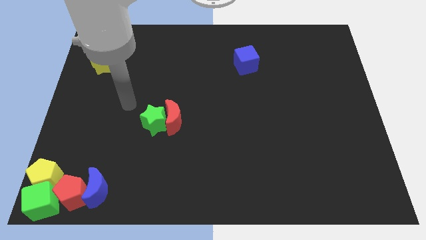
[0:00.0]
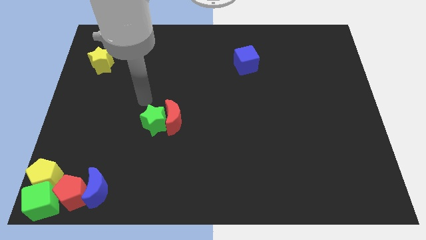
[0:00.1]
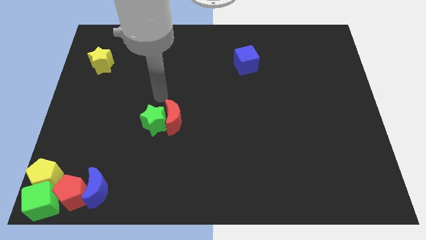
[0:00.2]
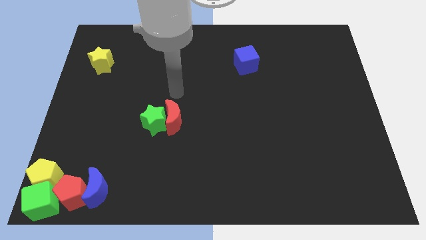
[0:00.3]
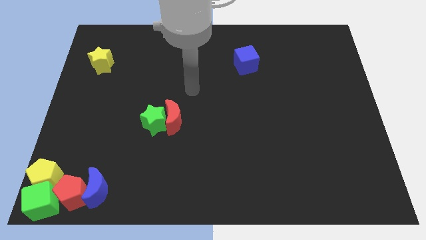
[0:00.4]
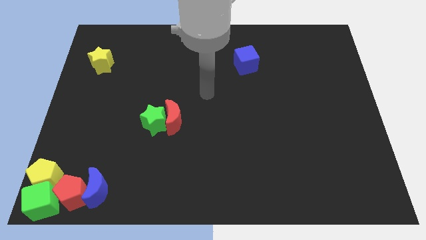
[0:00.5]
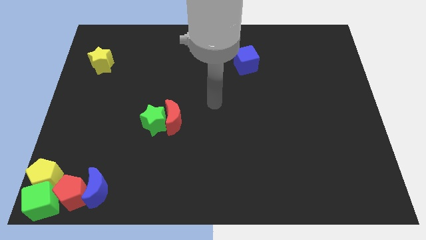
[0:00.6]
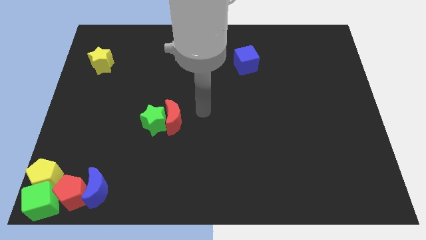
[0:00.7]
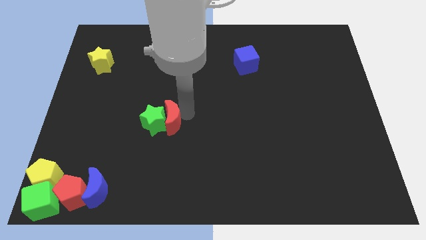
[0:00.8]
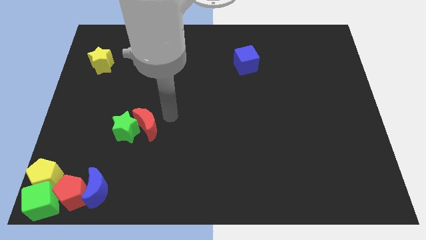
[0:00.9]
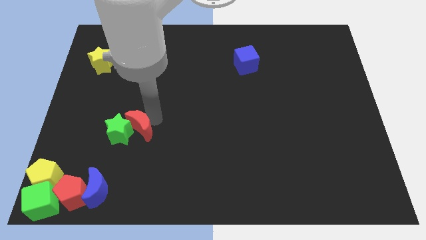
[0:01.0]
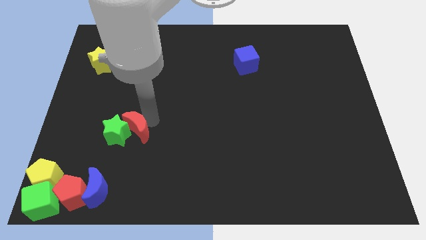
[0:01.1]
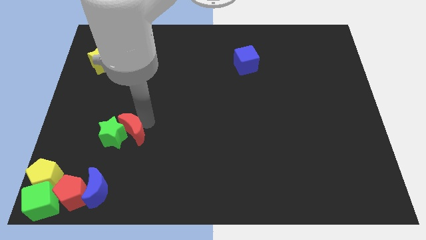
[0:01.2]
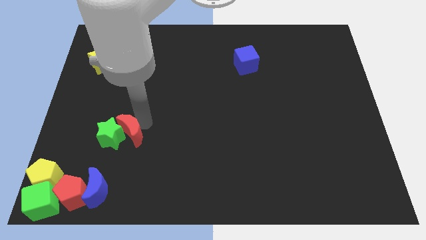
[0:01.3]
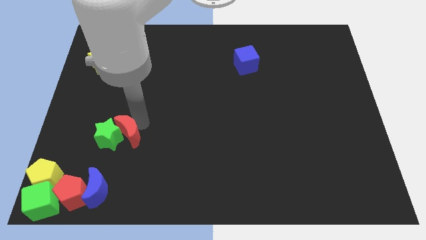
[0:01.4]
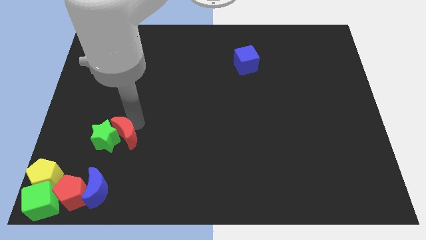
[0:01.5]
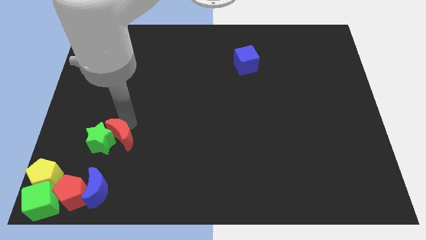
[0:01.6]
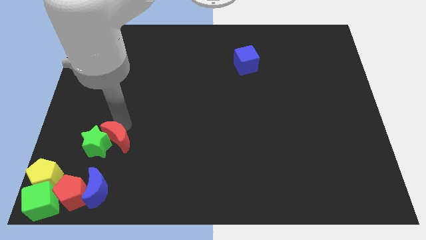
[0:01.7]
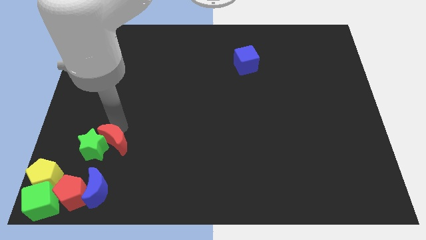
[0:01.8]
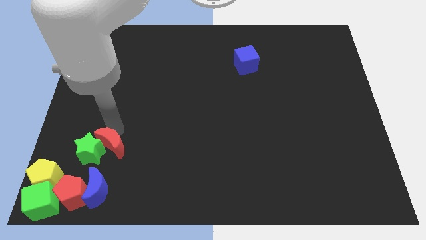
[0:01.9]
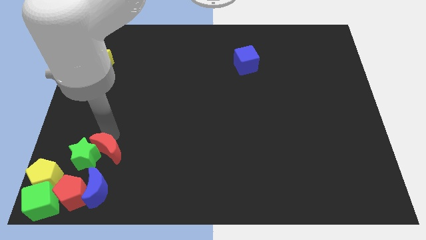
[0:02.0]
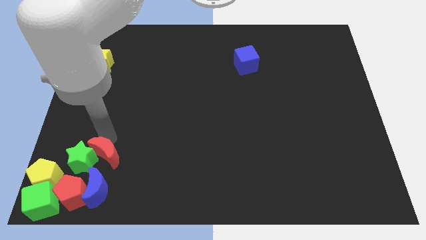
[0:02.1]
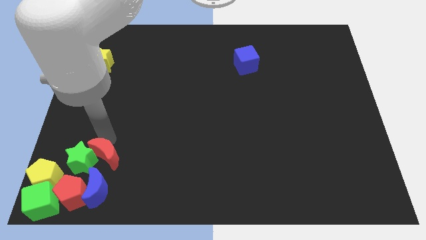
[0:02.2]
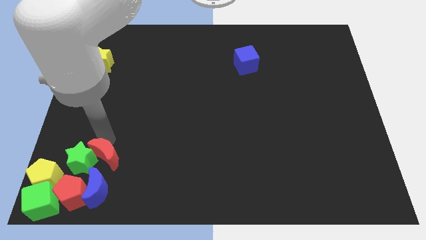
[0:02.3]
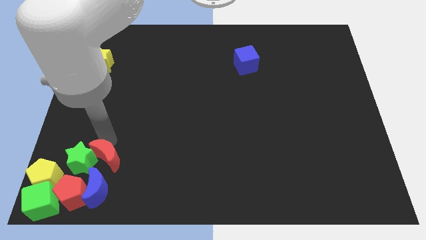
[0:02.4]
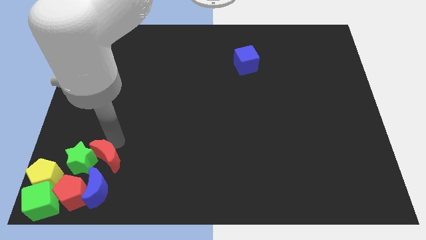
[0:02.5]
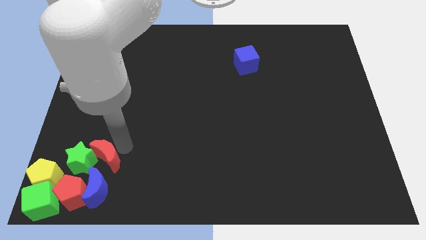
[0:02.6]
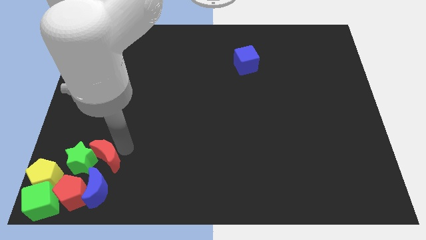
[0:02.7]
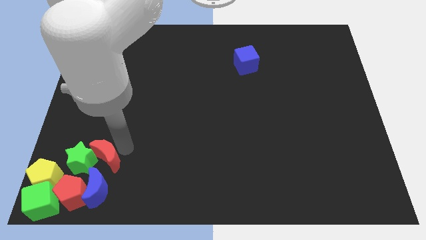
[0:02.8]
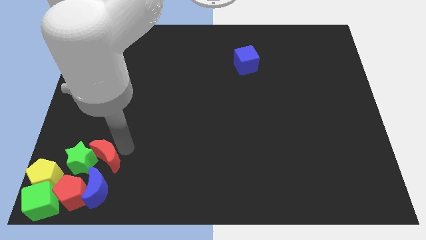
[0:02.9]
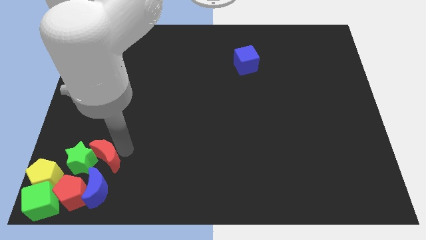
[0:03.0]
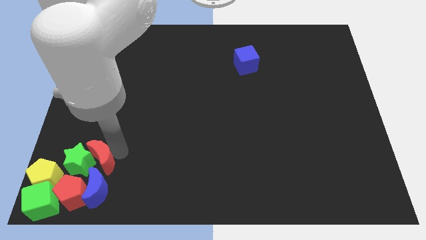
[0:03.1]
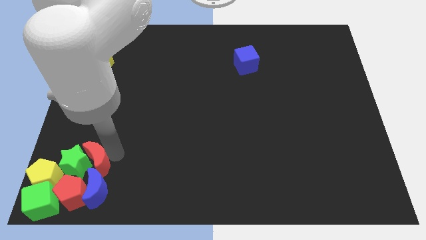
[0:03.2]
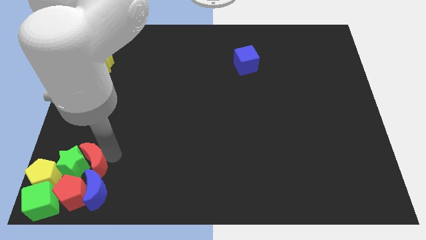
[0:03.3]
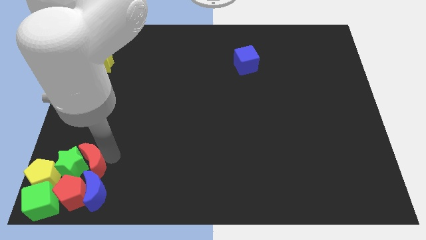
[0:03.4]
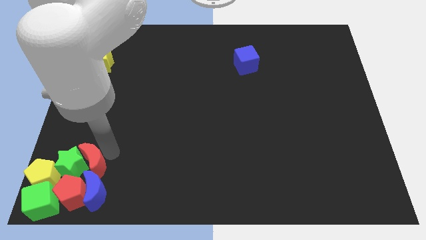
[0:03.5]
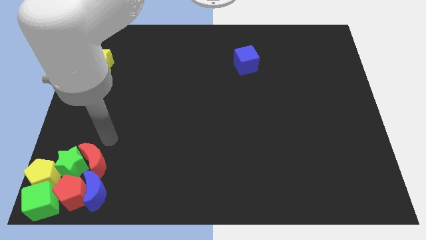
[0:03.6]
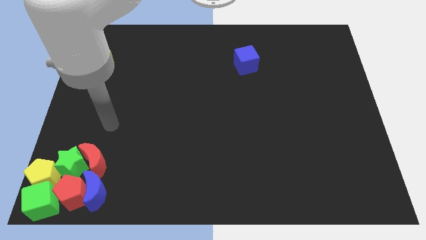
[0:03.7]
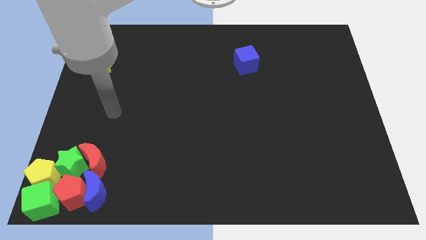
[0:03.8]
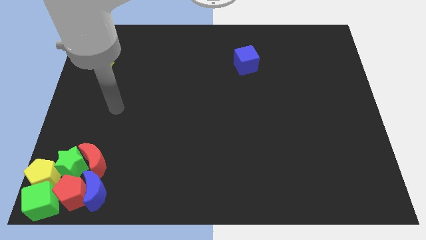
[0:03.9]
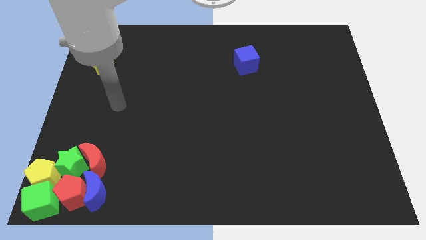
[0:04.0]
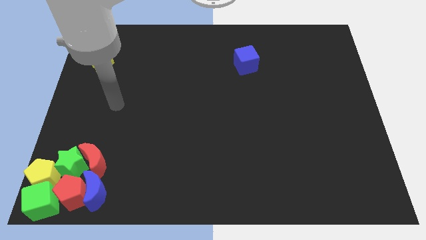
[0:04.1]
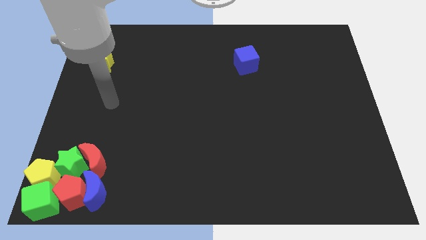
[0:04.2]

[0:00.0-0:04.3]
push the green star to the top of the red pentagon with the help of the red crescent

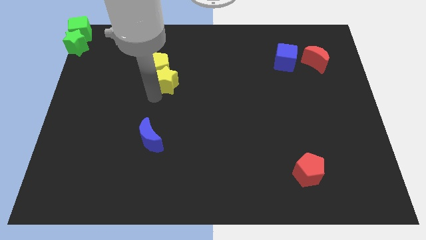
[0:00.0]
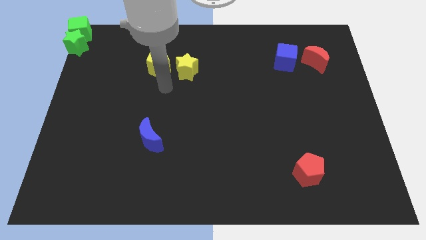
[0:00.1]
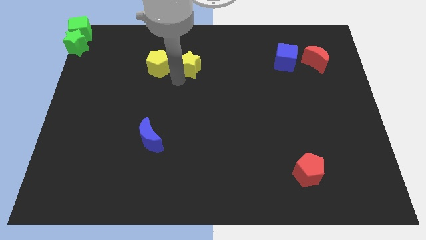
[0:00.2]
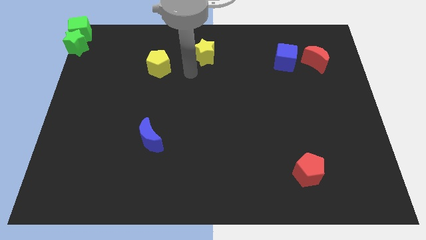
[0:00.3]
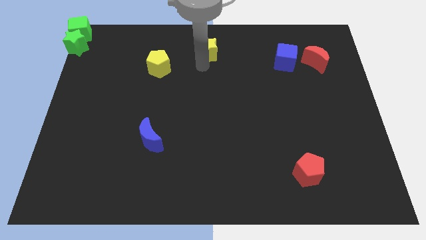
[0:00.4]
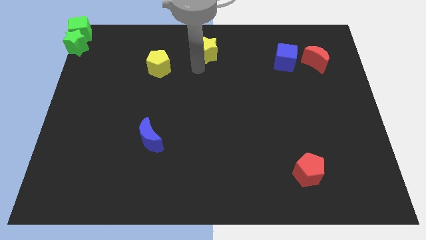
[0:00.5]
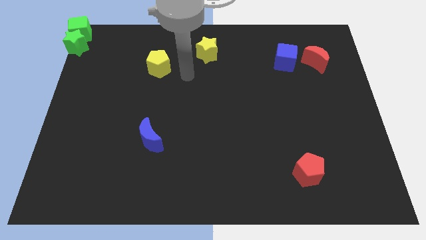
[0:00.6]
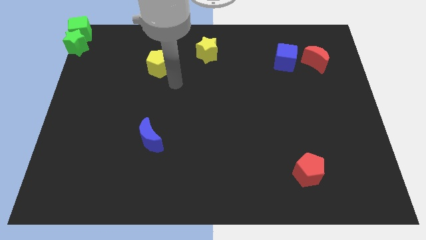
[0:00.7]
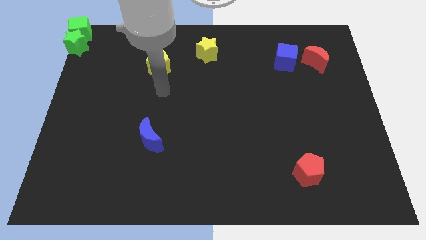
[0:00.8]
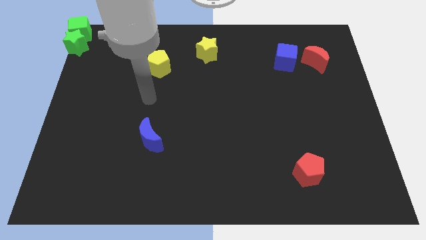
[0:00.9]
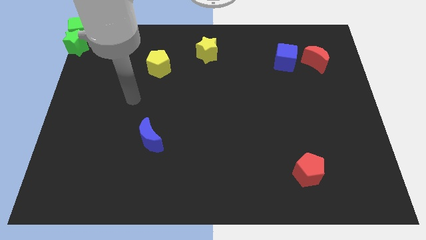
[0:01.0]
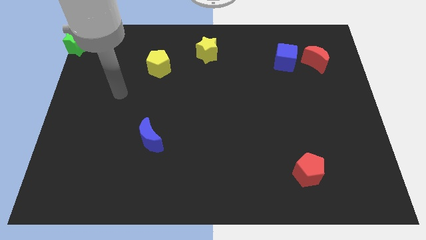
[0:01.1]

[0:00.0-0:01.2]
separate green star from the yellow pentagon

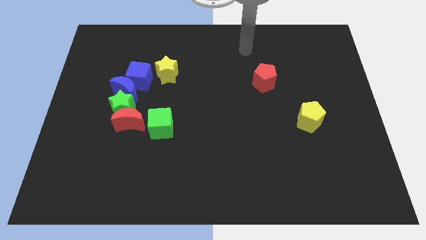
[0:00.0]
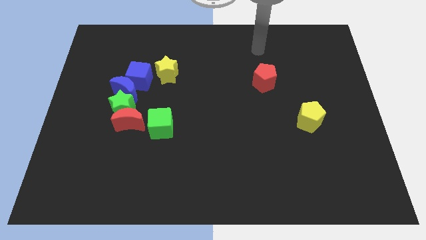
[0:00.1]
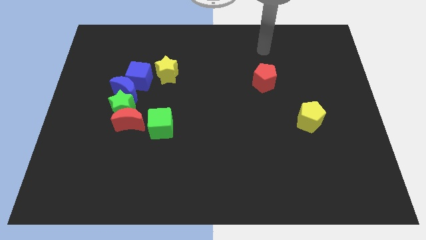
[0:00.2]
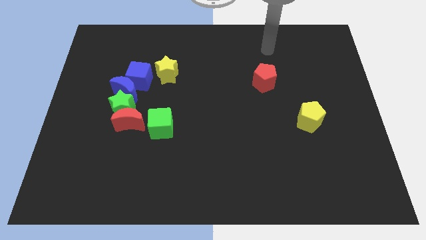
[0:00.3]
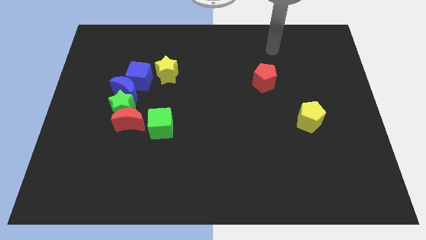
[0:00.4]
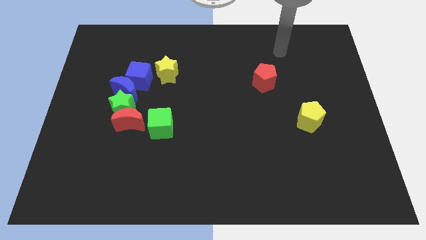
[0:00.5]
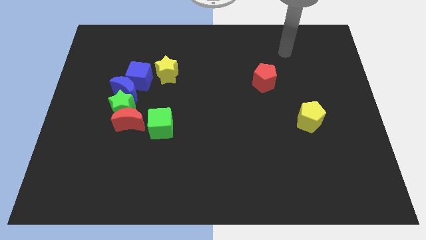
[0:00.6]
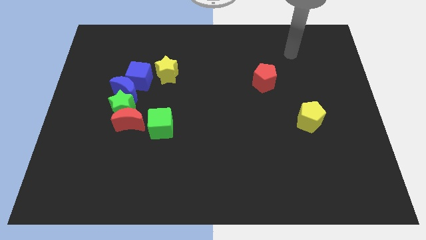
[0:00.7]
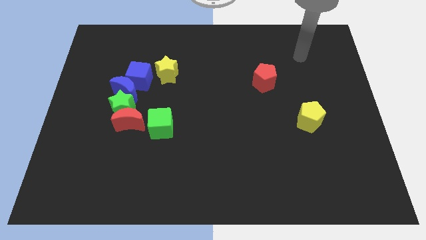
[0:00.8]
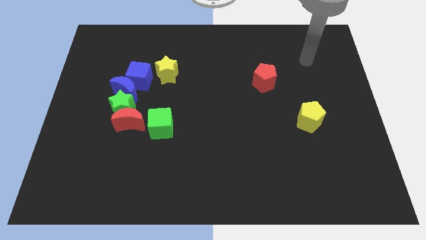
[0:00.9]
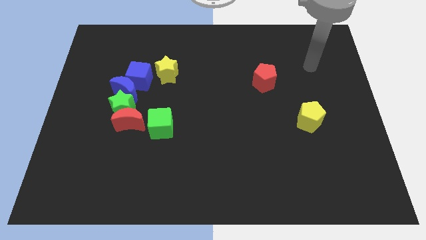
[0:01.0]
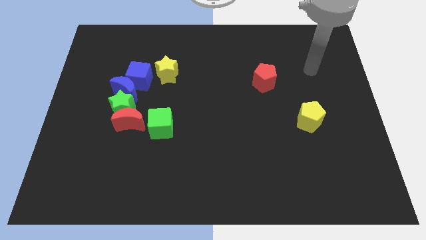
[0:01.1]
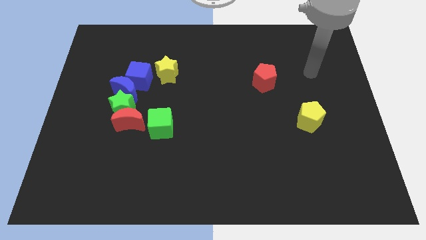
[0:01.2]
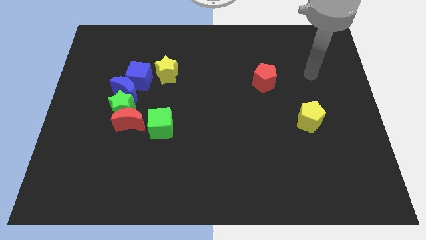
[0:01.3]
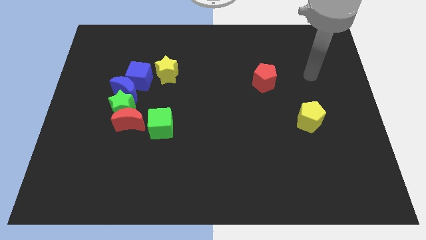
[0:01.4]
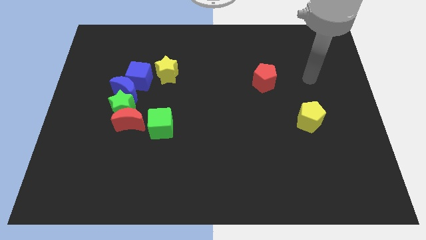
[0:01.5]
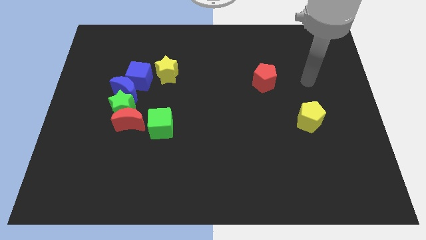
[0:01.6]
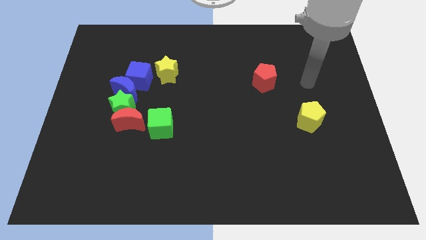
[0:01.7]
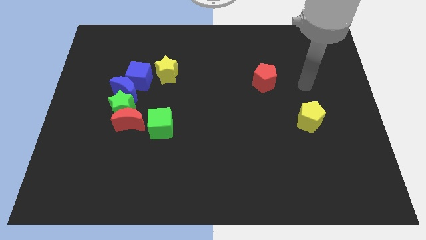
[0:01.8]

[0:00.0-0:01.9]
point the arm to the right of the red pentagon

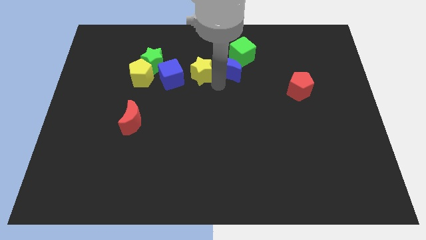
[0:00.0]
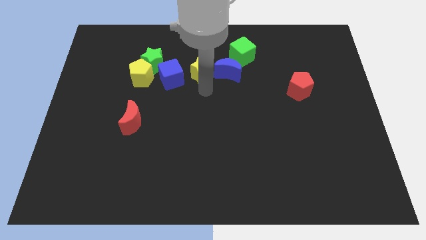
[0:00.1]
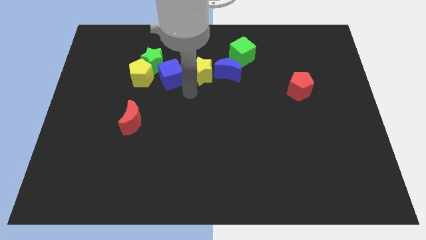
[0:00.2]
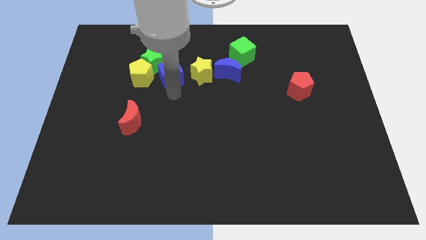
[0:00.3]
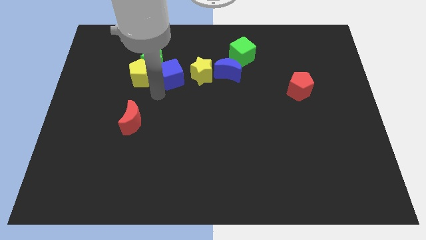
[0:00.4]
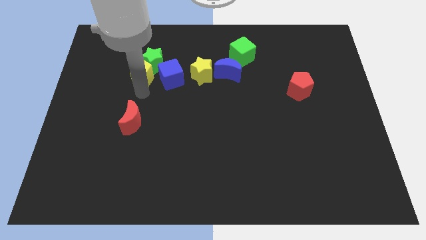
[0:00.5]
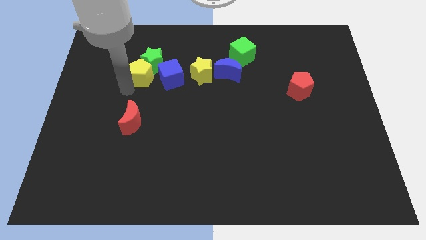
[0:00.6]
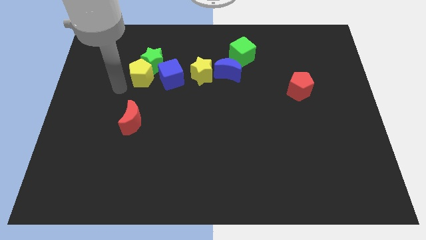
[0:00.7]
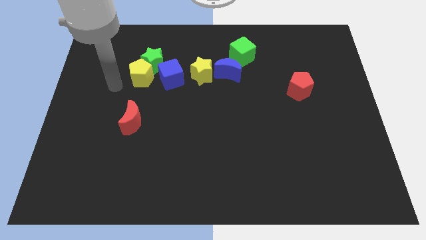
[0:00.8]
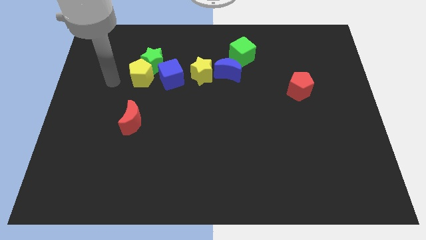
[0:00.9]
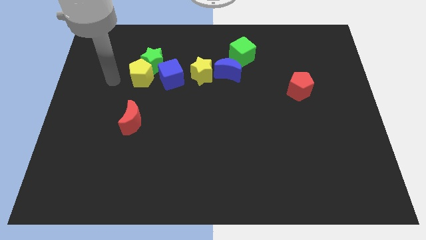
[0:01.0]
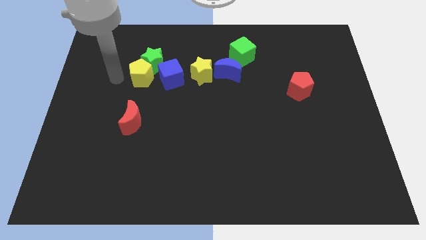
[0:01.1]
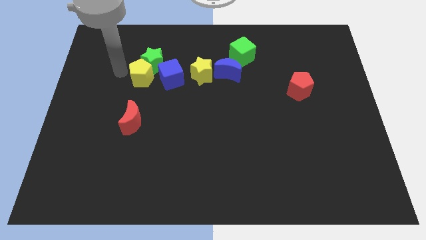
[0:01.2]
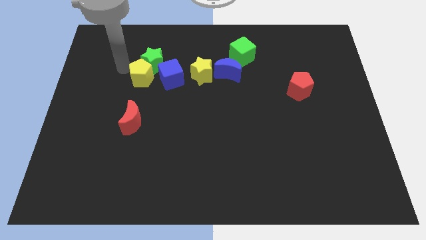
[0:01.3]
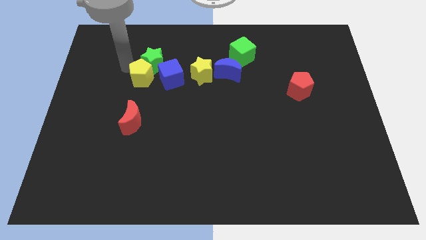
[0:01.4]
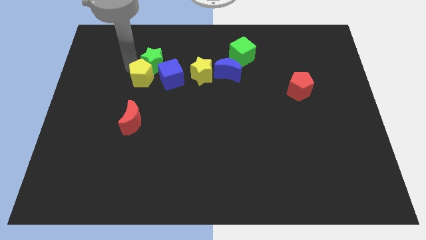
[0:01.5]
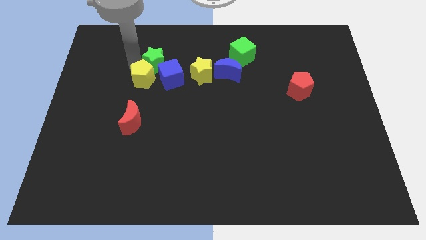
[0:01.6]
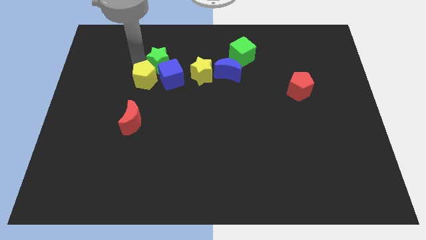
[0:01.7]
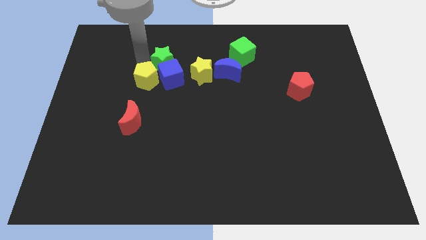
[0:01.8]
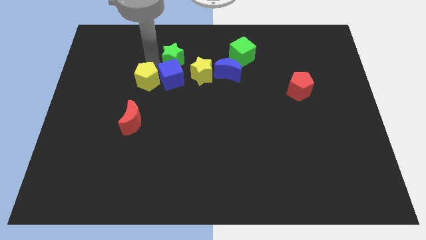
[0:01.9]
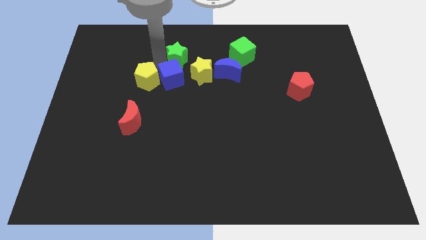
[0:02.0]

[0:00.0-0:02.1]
place the yellow pentagon on the left side of the blue cube
